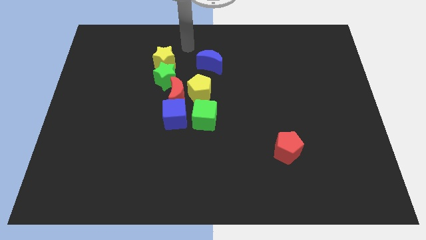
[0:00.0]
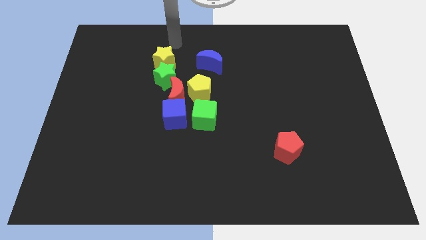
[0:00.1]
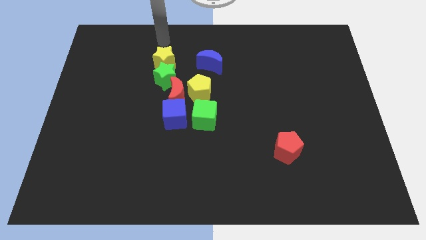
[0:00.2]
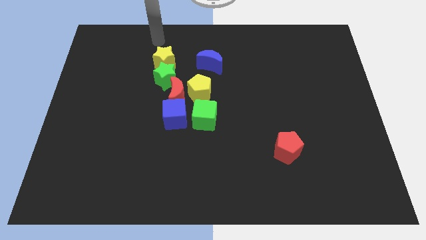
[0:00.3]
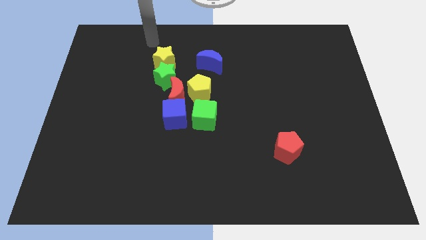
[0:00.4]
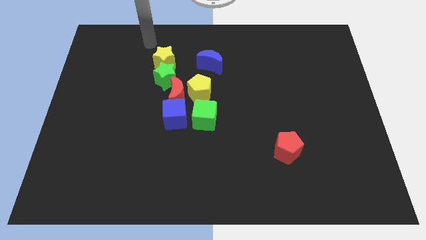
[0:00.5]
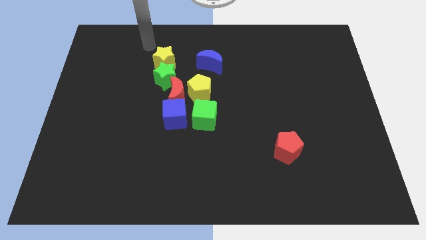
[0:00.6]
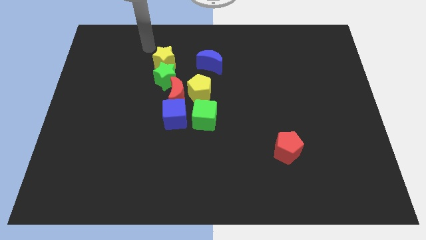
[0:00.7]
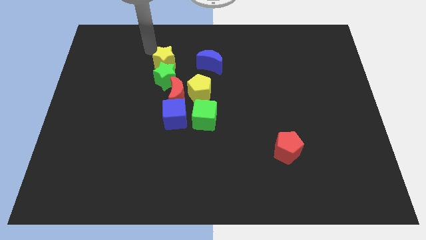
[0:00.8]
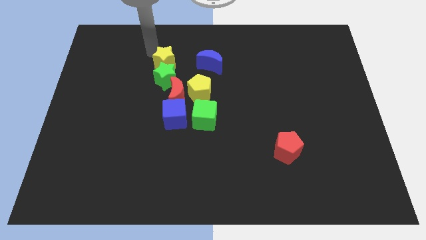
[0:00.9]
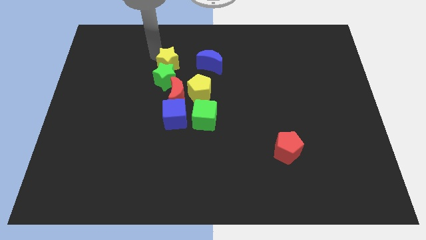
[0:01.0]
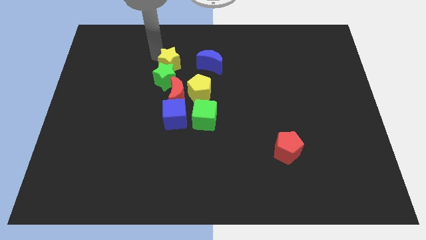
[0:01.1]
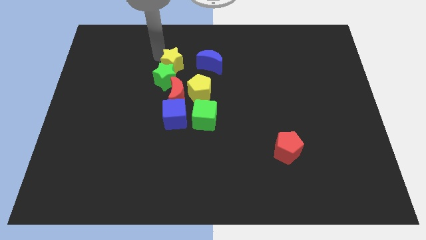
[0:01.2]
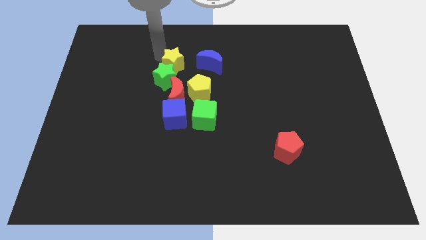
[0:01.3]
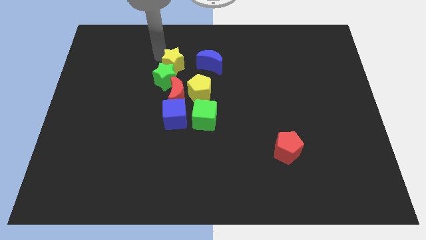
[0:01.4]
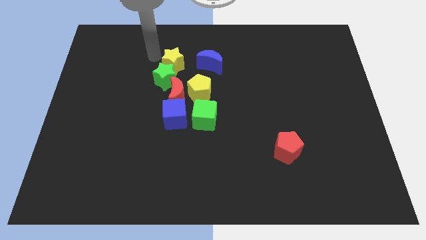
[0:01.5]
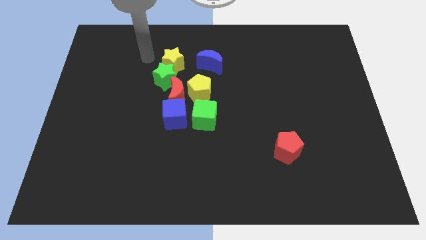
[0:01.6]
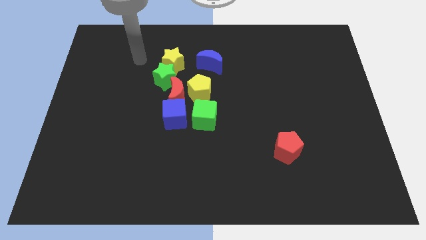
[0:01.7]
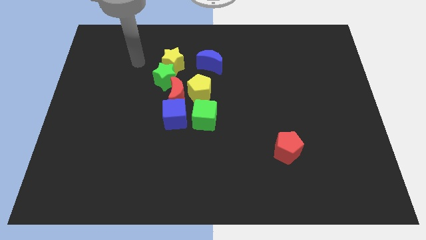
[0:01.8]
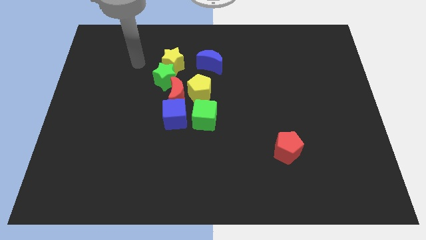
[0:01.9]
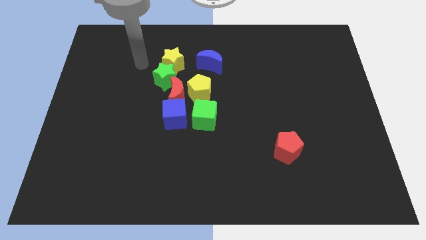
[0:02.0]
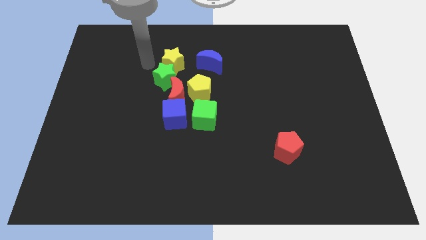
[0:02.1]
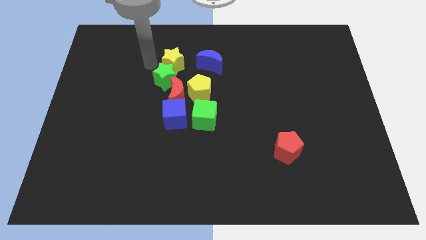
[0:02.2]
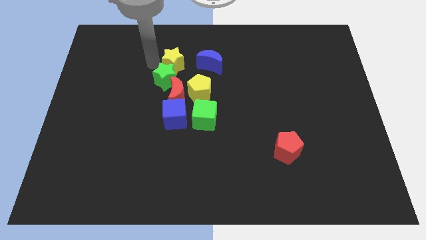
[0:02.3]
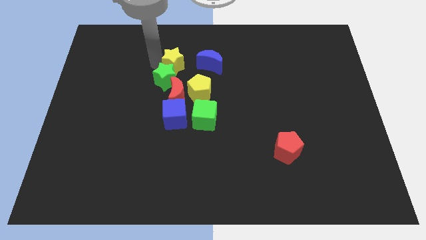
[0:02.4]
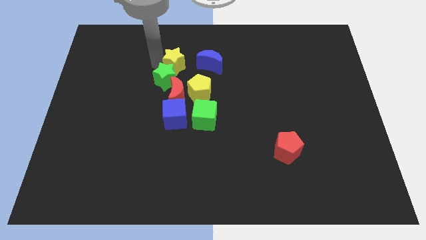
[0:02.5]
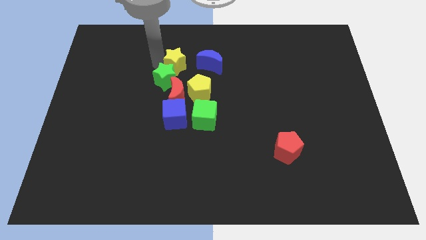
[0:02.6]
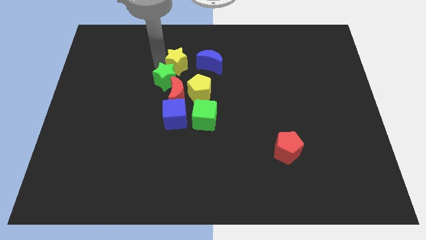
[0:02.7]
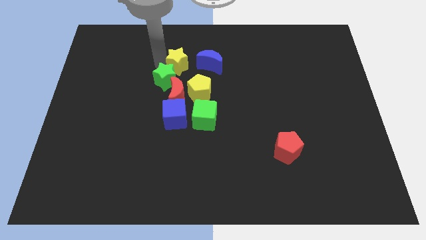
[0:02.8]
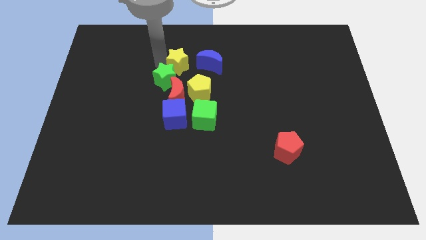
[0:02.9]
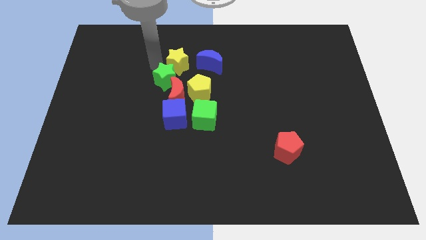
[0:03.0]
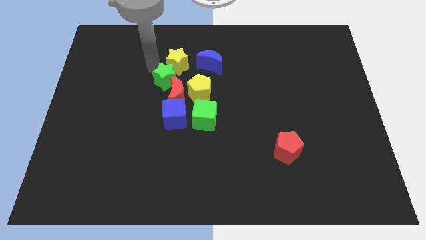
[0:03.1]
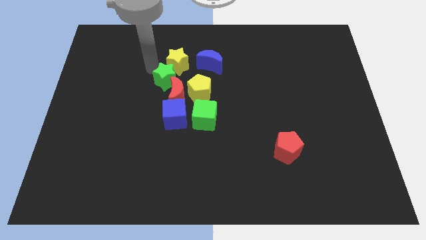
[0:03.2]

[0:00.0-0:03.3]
push the yellow star slightly to the right

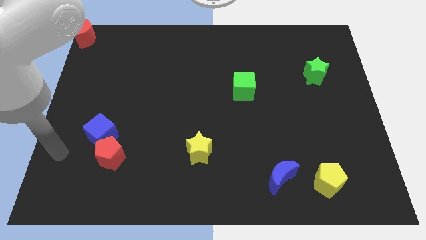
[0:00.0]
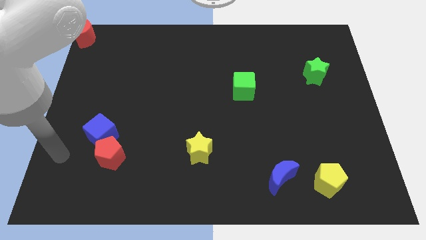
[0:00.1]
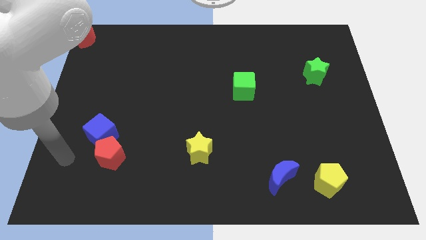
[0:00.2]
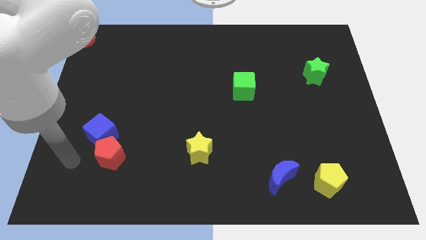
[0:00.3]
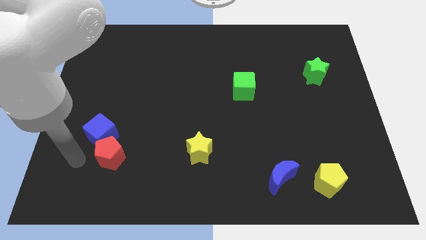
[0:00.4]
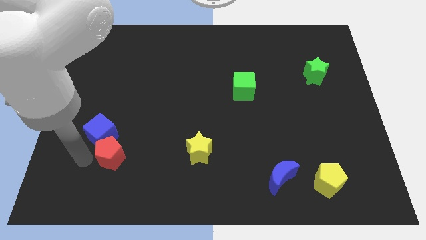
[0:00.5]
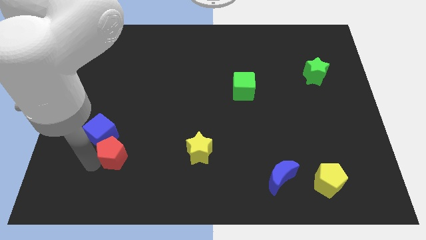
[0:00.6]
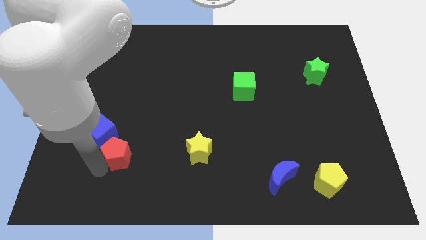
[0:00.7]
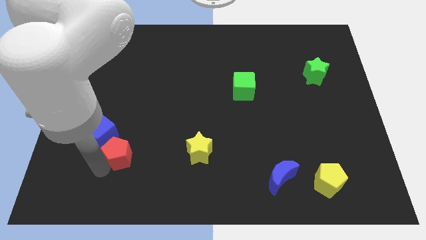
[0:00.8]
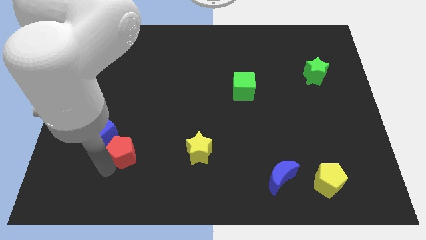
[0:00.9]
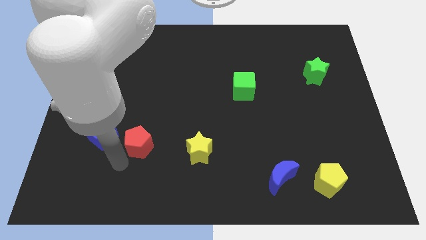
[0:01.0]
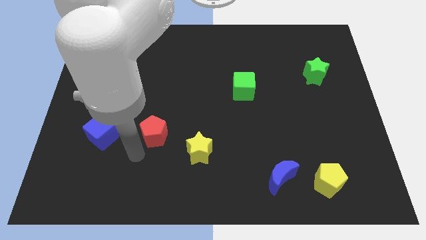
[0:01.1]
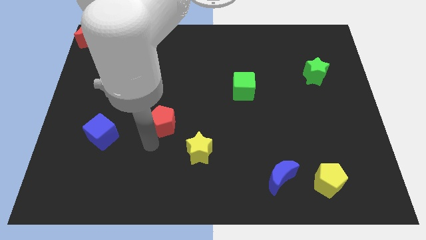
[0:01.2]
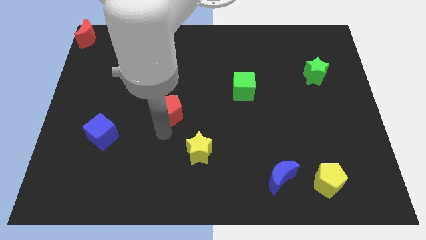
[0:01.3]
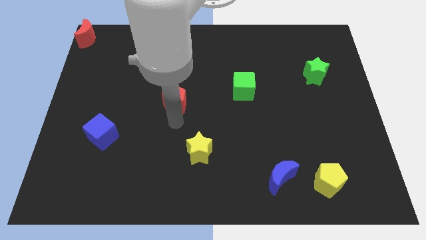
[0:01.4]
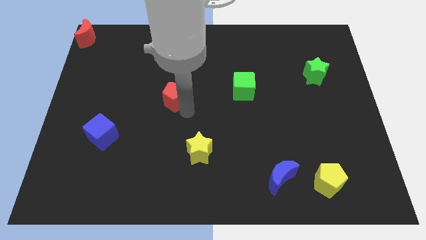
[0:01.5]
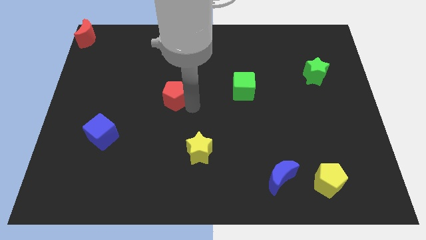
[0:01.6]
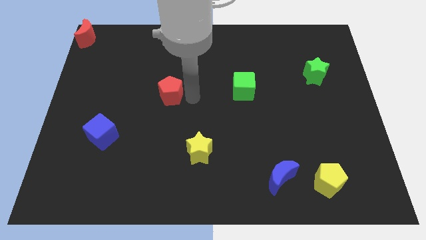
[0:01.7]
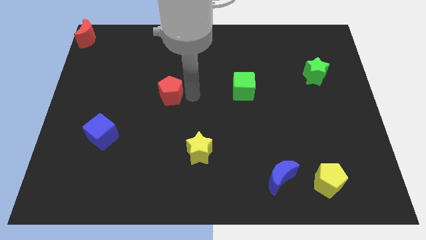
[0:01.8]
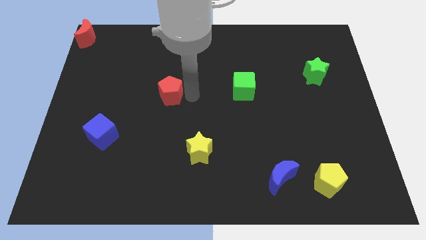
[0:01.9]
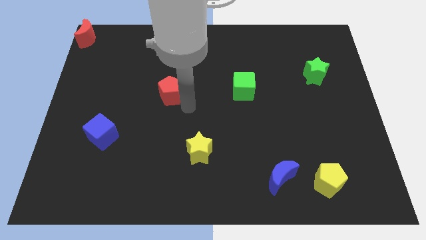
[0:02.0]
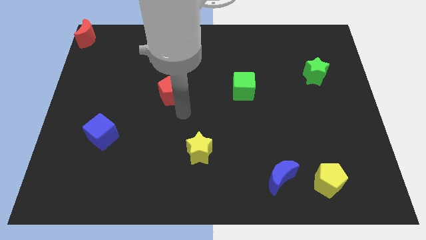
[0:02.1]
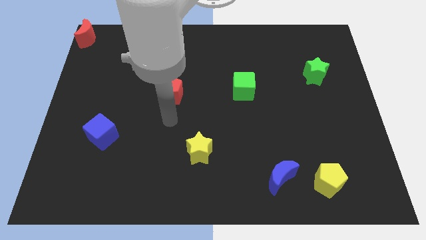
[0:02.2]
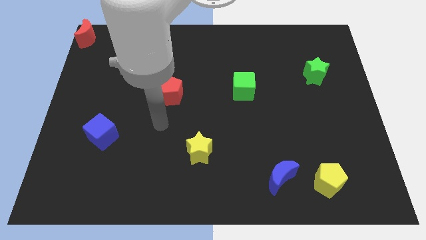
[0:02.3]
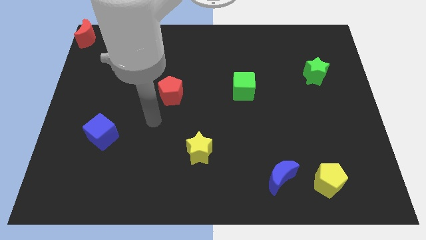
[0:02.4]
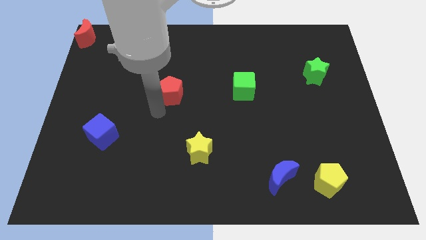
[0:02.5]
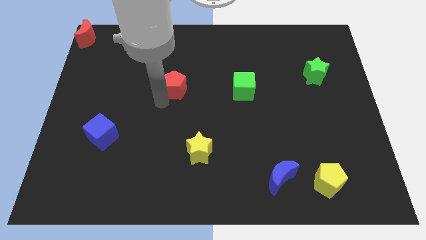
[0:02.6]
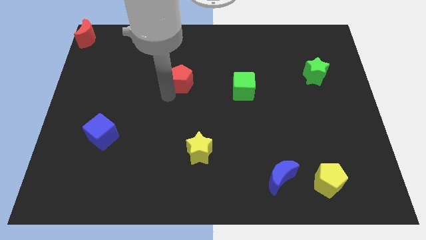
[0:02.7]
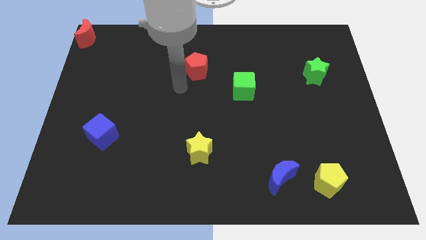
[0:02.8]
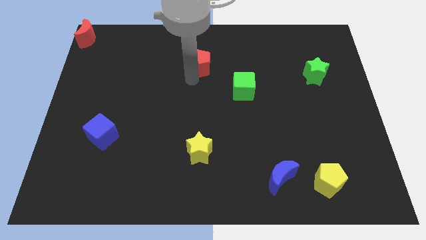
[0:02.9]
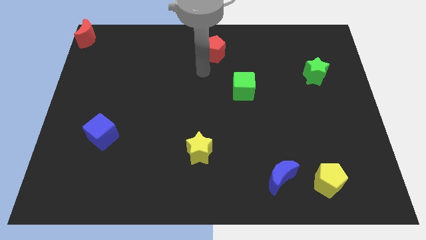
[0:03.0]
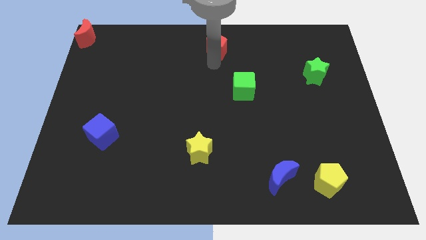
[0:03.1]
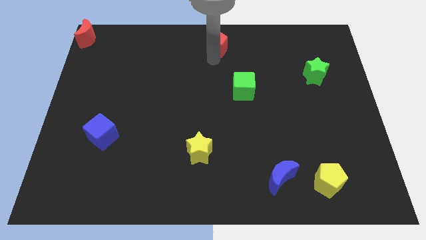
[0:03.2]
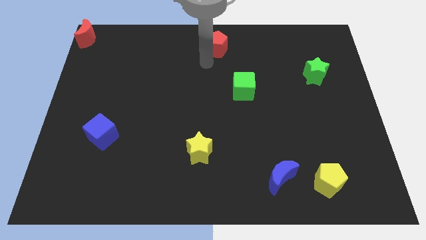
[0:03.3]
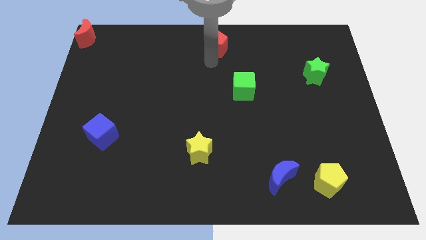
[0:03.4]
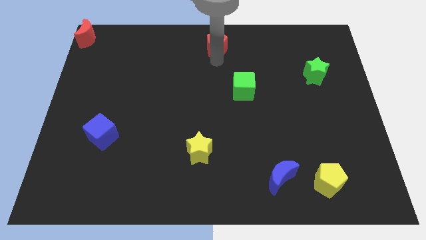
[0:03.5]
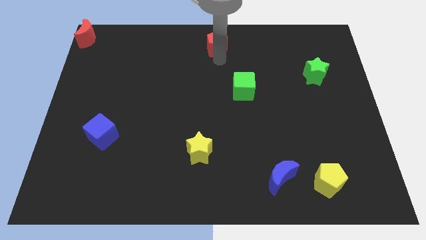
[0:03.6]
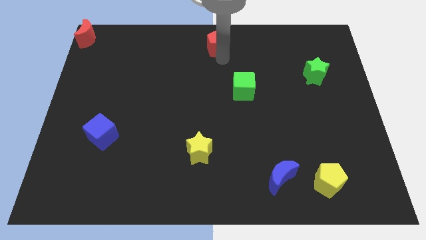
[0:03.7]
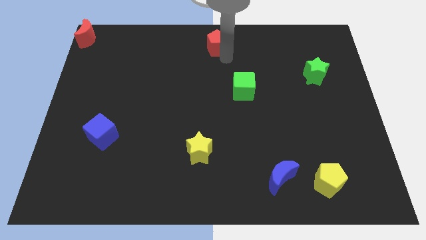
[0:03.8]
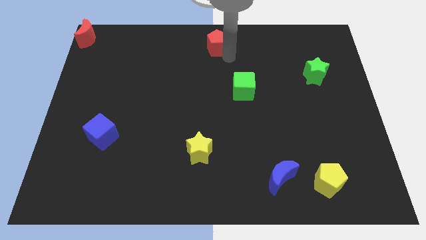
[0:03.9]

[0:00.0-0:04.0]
push the red pentagon diagonal to the green cube

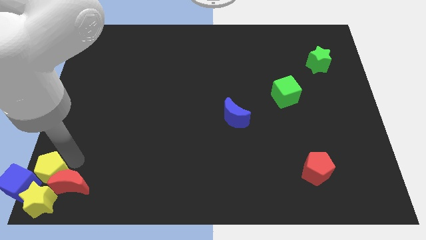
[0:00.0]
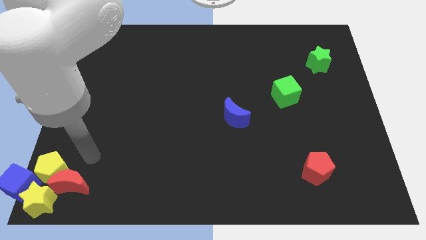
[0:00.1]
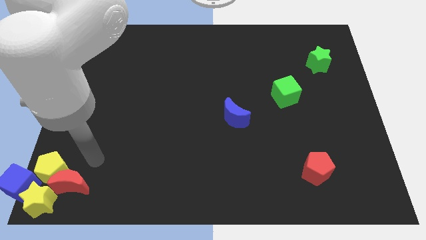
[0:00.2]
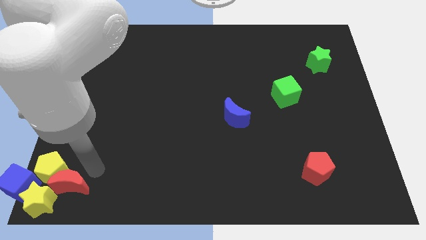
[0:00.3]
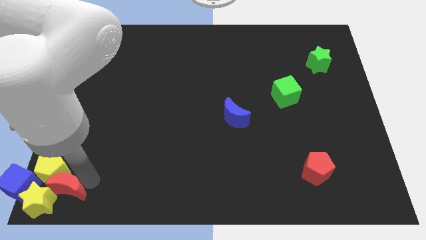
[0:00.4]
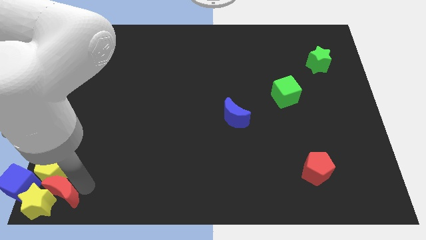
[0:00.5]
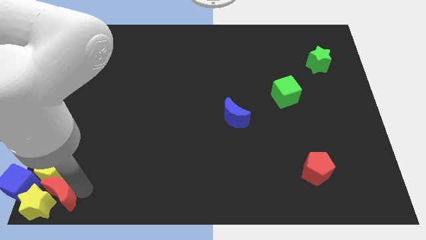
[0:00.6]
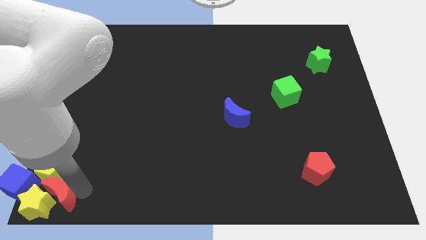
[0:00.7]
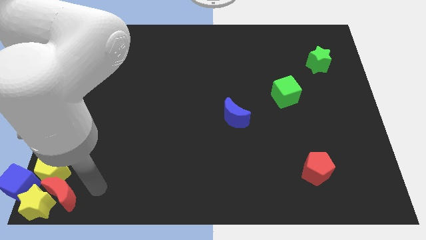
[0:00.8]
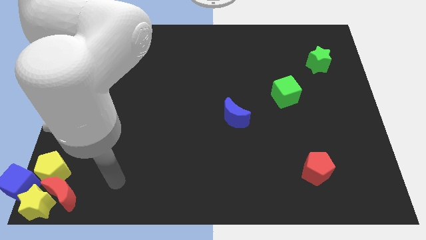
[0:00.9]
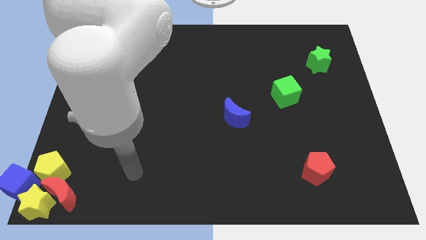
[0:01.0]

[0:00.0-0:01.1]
push red crescent in to yellow star

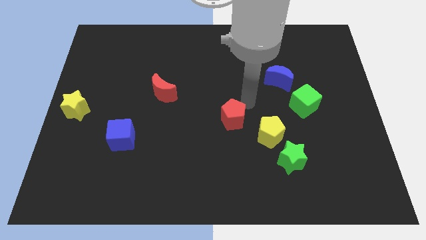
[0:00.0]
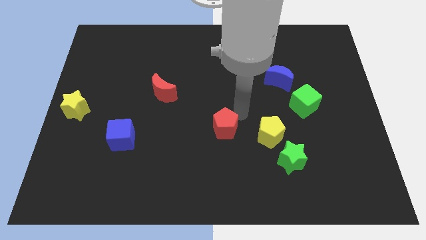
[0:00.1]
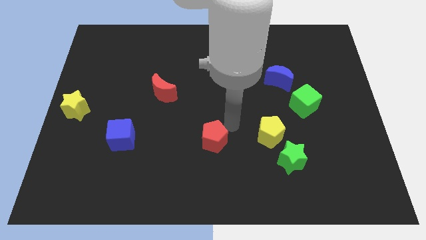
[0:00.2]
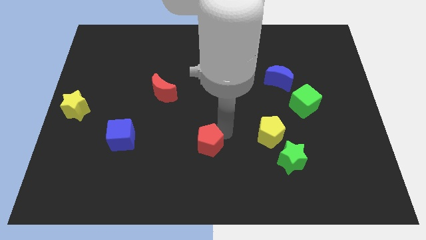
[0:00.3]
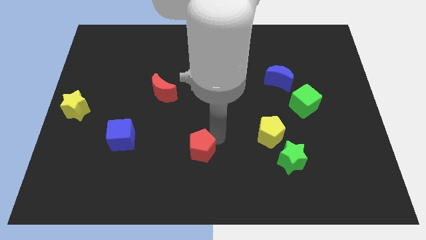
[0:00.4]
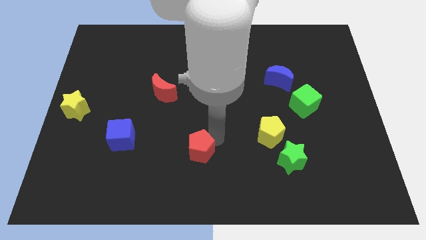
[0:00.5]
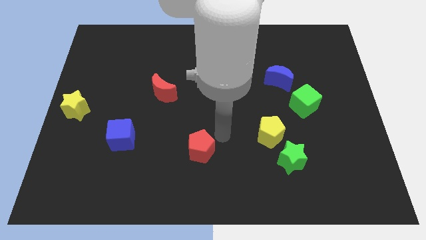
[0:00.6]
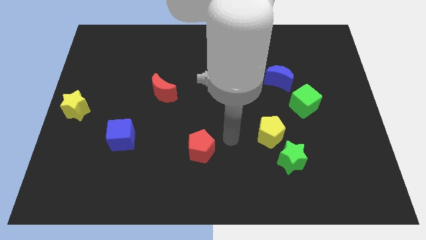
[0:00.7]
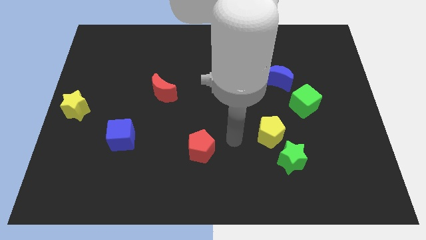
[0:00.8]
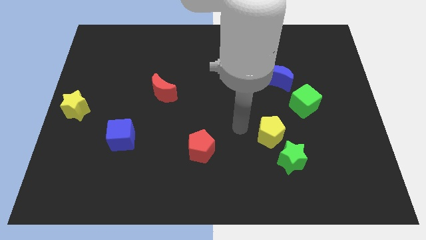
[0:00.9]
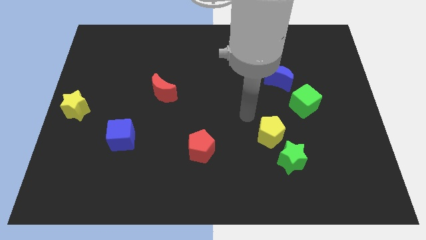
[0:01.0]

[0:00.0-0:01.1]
slide red pentagon to the right of blue cube
